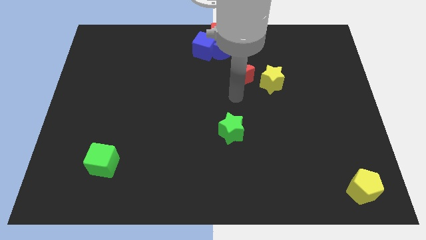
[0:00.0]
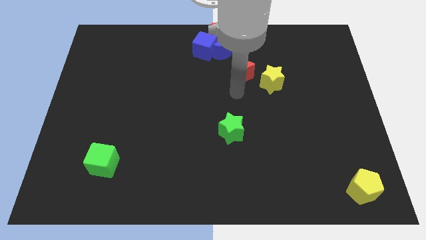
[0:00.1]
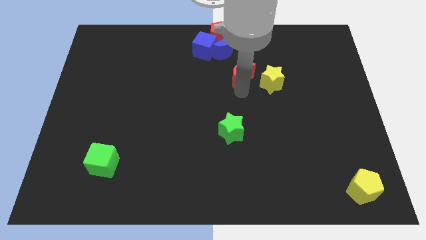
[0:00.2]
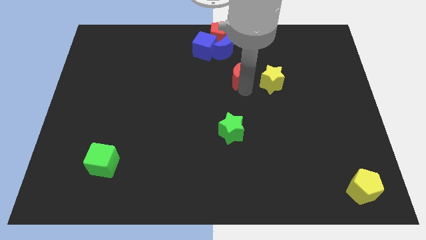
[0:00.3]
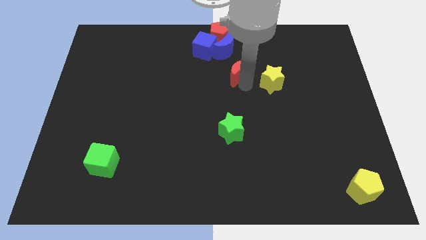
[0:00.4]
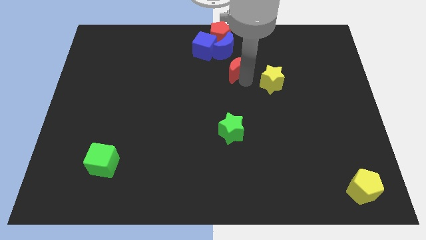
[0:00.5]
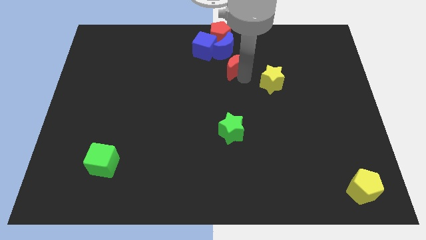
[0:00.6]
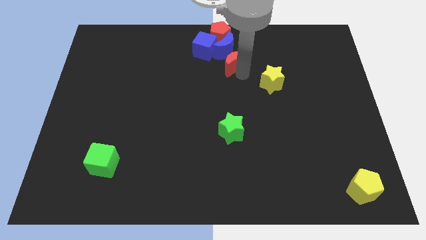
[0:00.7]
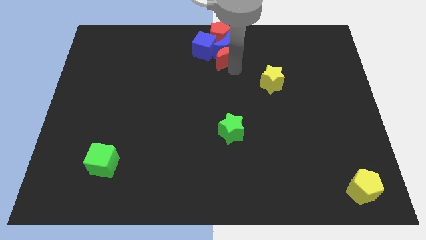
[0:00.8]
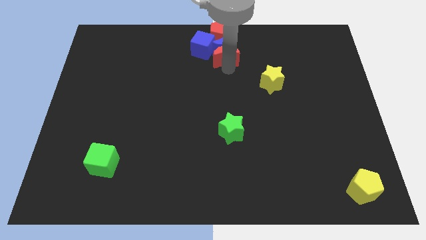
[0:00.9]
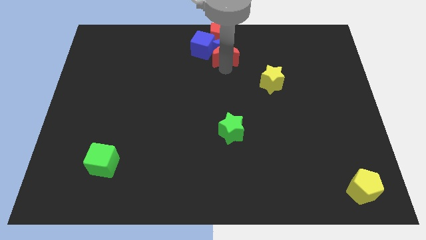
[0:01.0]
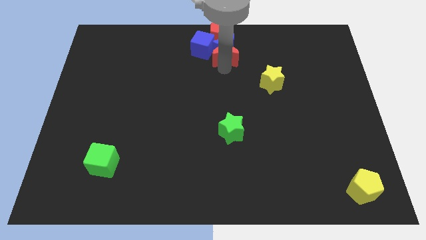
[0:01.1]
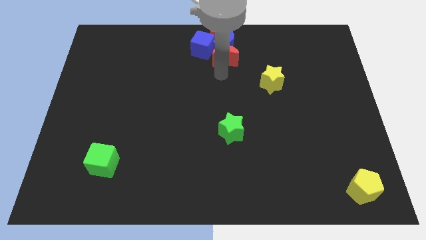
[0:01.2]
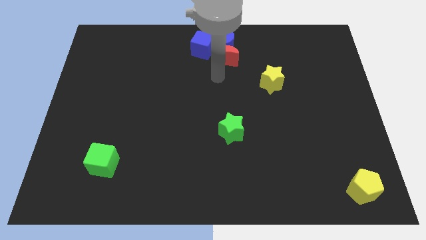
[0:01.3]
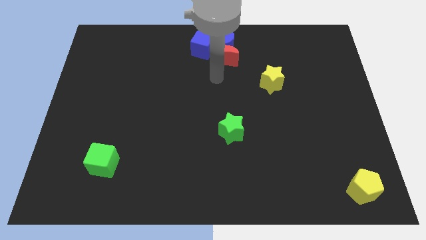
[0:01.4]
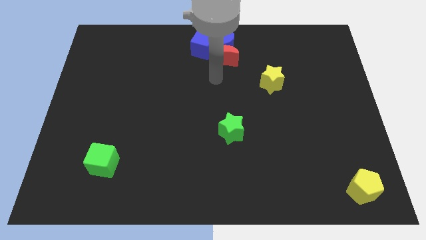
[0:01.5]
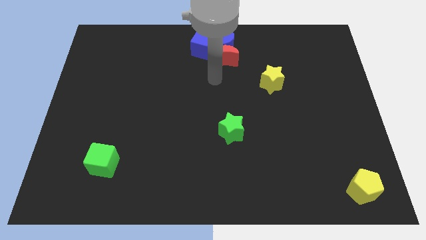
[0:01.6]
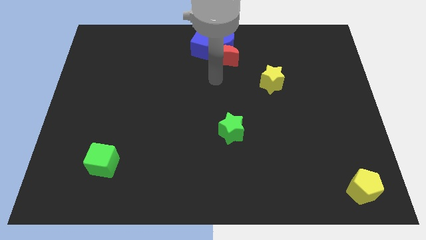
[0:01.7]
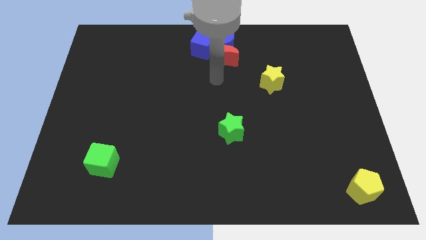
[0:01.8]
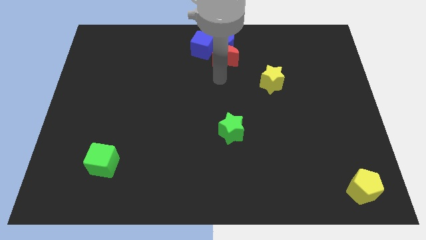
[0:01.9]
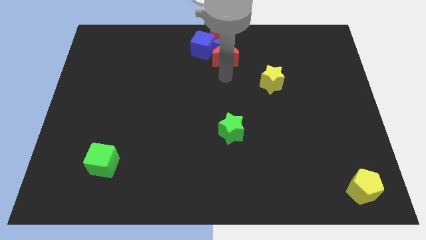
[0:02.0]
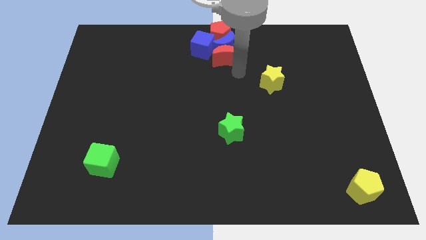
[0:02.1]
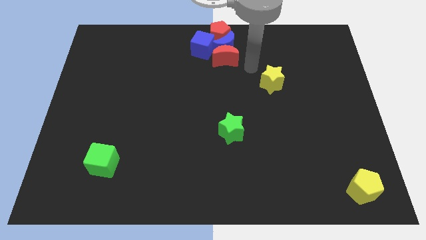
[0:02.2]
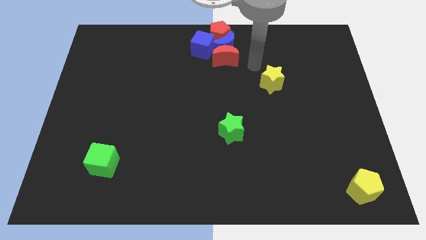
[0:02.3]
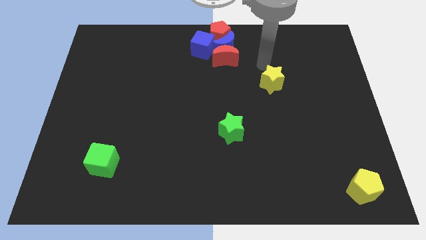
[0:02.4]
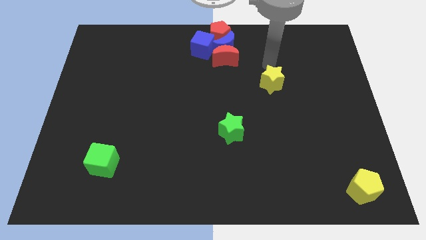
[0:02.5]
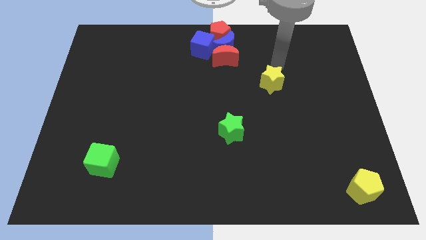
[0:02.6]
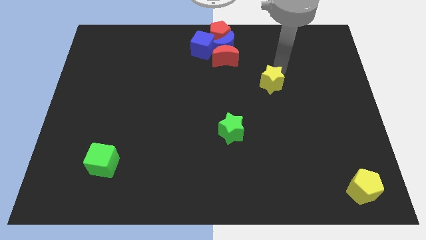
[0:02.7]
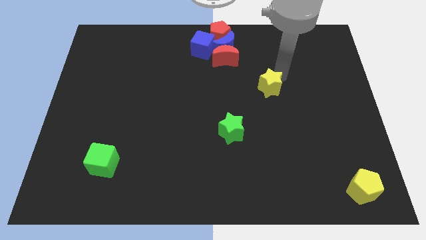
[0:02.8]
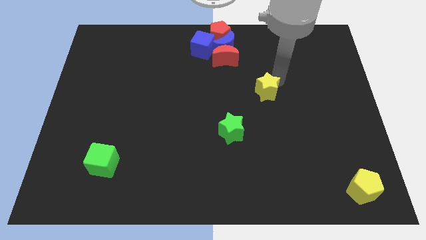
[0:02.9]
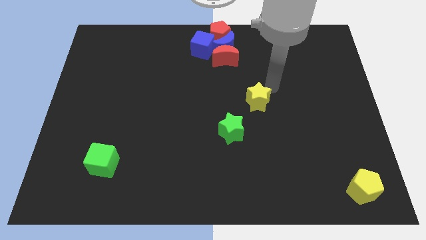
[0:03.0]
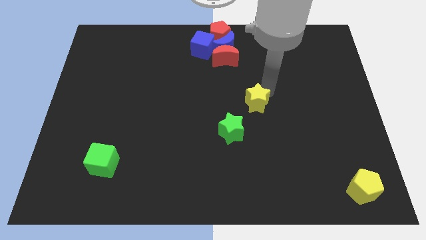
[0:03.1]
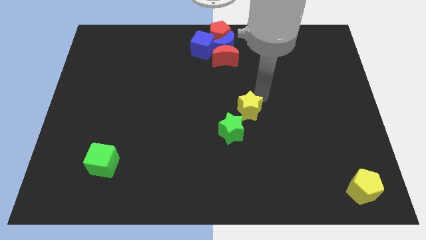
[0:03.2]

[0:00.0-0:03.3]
move the yellow star slightly downwards

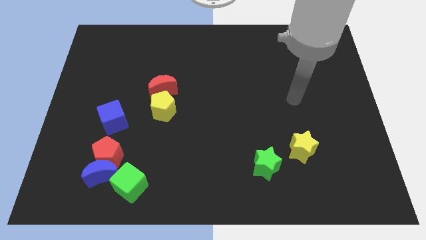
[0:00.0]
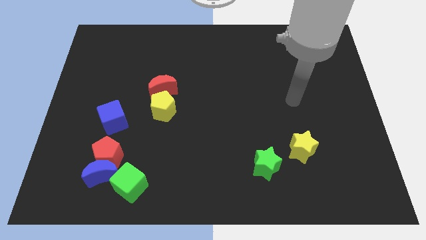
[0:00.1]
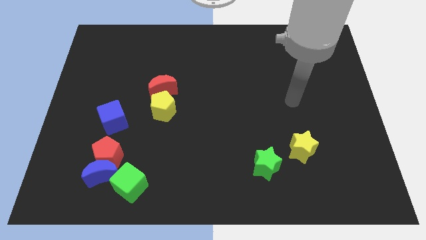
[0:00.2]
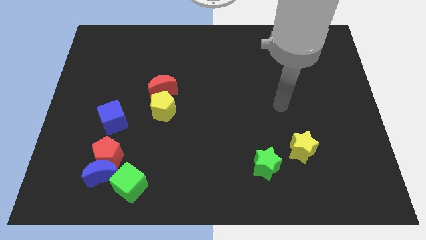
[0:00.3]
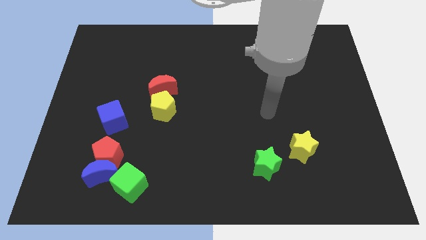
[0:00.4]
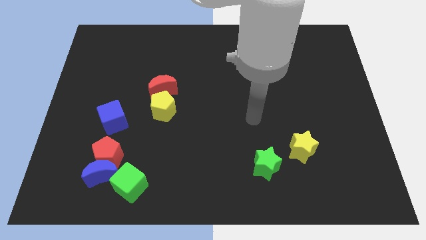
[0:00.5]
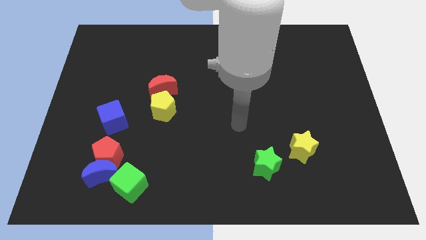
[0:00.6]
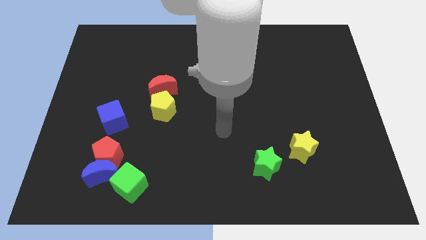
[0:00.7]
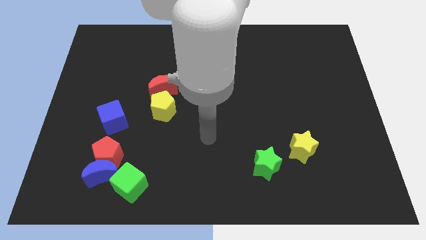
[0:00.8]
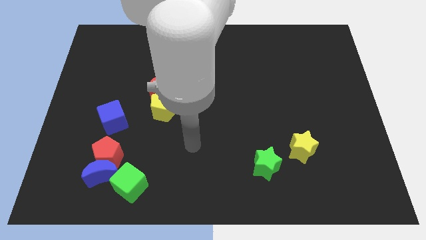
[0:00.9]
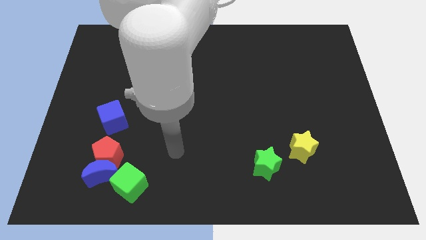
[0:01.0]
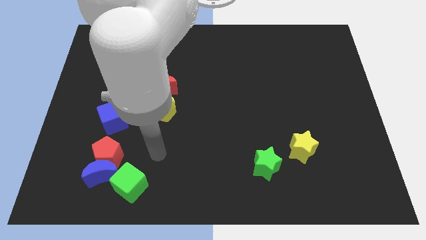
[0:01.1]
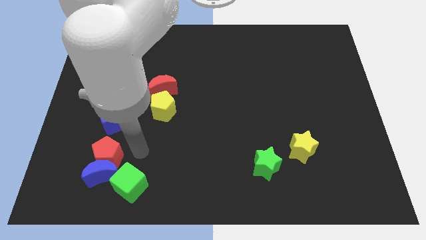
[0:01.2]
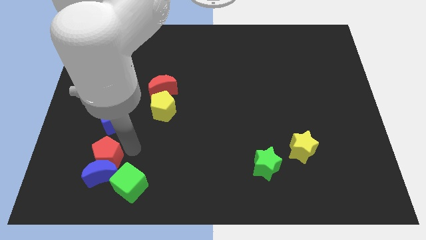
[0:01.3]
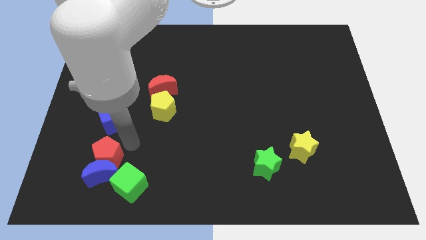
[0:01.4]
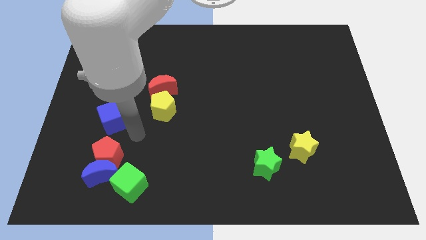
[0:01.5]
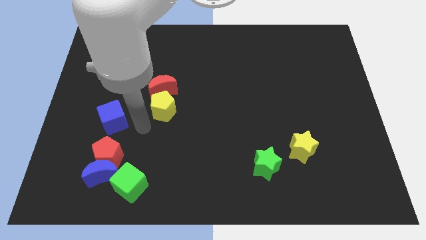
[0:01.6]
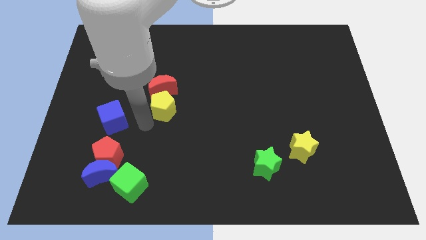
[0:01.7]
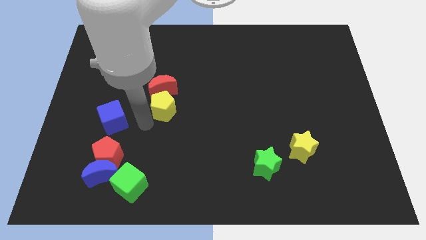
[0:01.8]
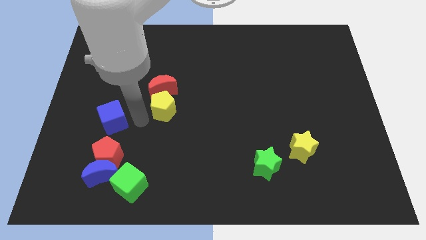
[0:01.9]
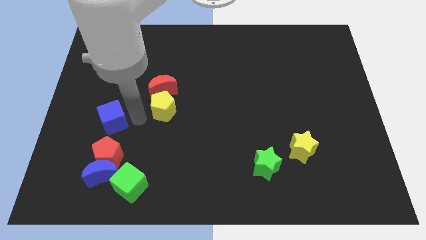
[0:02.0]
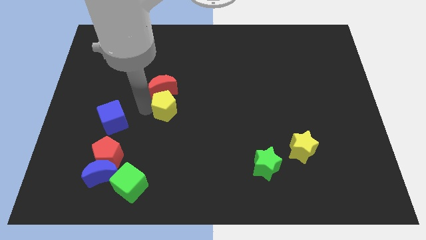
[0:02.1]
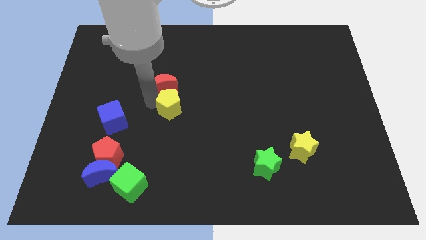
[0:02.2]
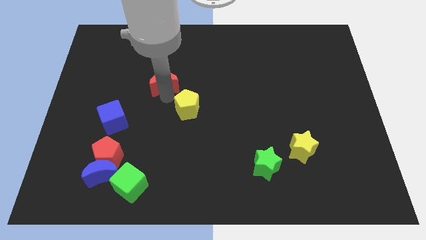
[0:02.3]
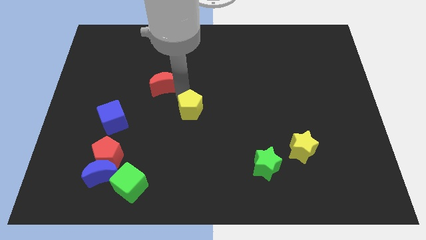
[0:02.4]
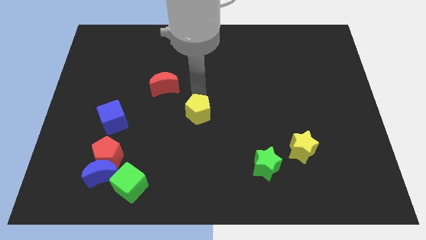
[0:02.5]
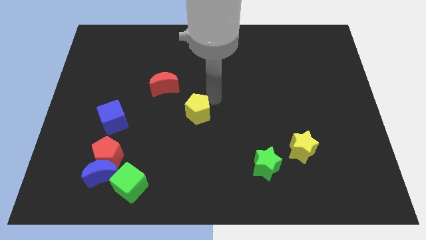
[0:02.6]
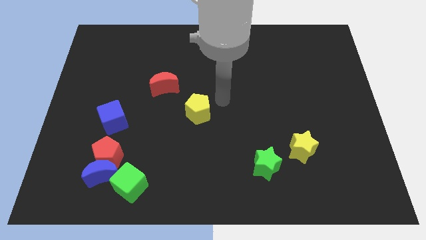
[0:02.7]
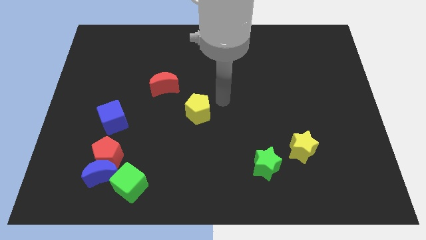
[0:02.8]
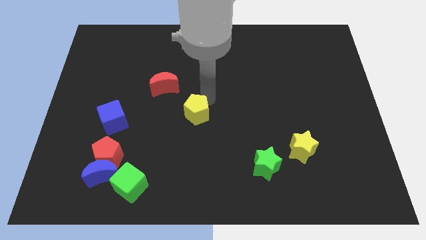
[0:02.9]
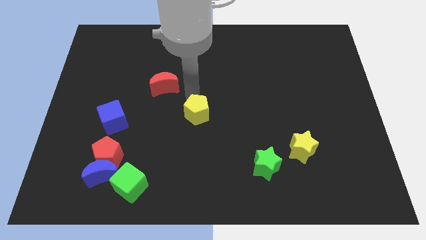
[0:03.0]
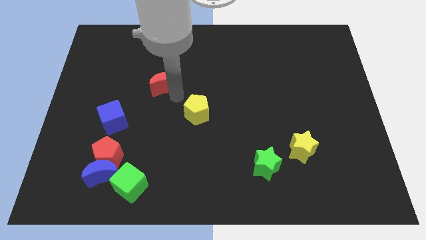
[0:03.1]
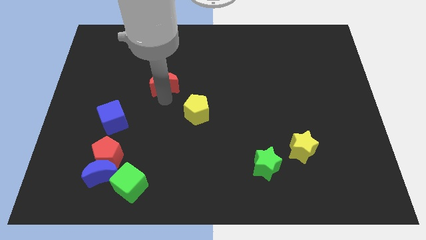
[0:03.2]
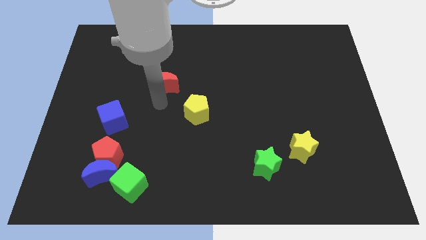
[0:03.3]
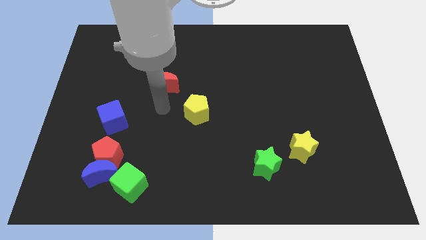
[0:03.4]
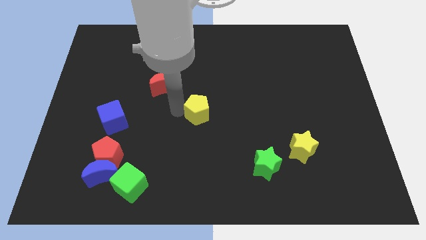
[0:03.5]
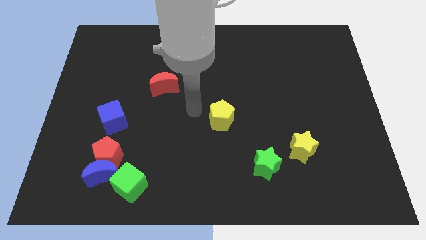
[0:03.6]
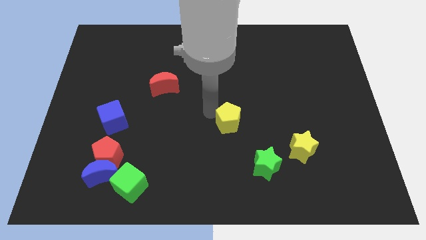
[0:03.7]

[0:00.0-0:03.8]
push the yellow pentagon to the center of the board

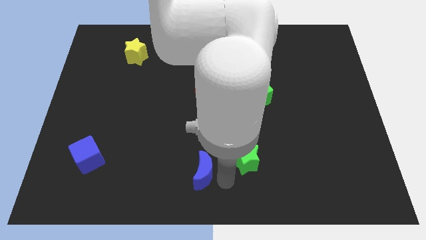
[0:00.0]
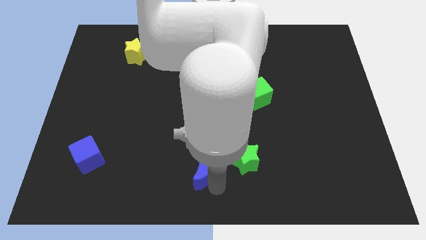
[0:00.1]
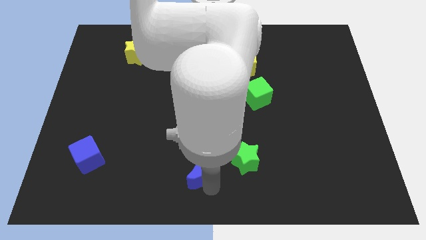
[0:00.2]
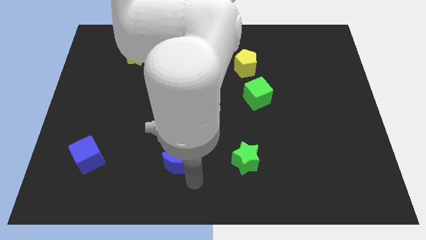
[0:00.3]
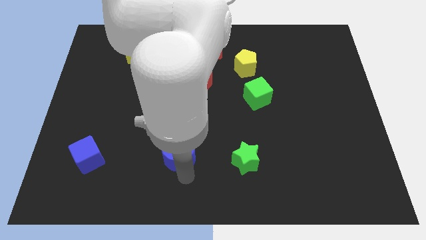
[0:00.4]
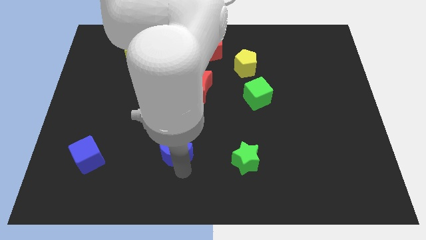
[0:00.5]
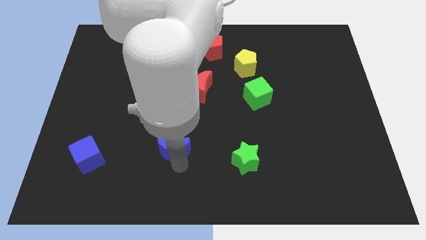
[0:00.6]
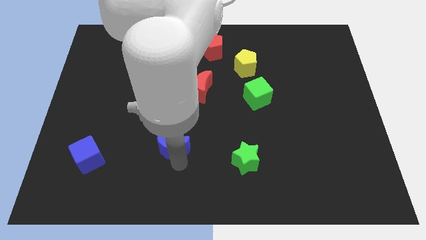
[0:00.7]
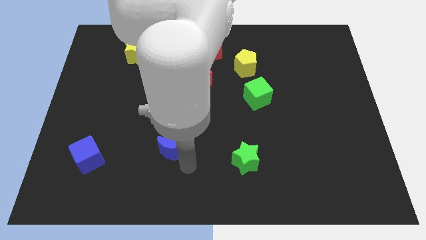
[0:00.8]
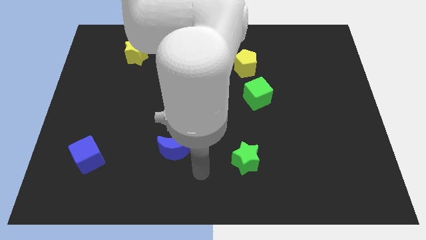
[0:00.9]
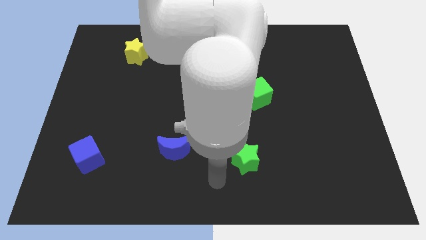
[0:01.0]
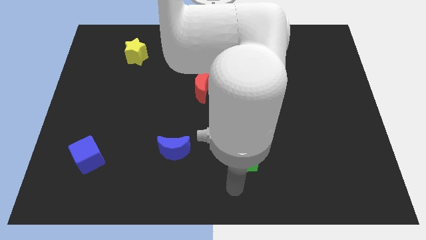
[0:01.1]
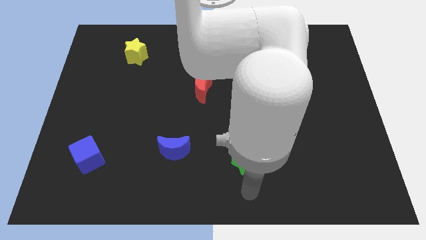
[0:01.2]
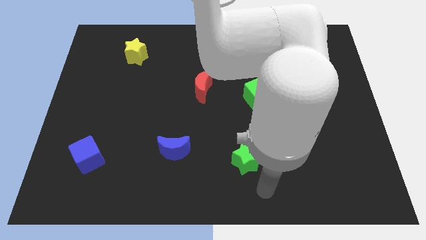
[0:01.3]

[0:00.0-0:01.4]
push the blue moon slightly up on the board

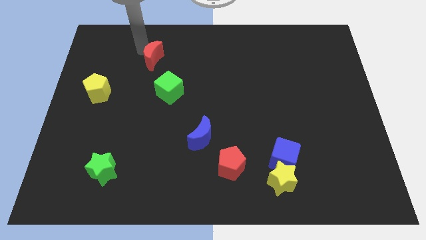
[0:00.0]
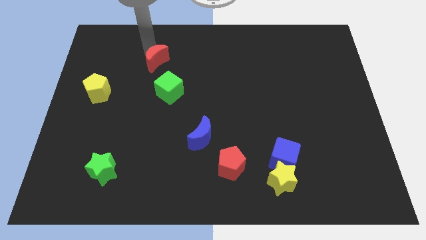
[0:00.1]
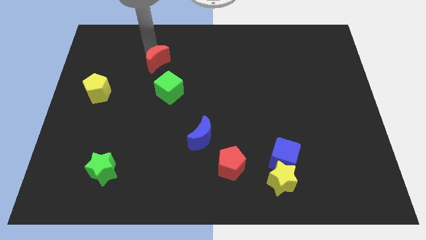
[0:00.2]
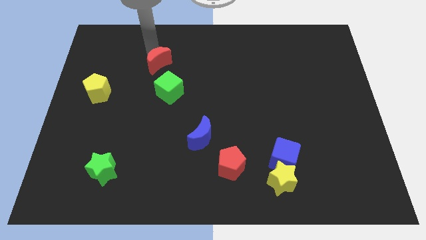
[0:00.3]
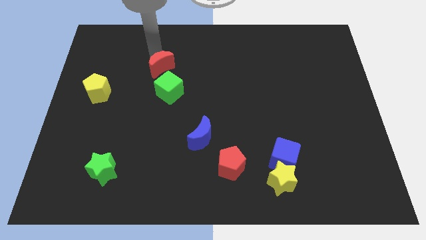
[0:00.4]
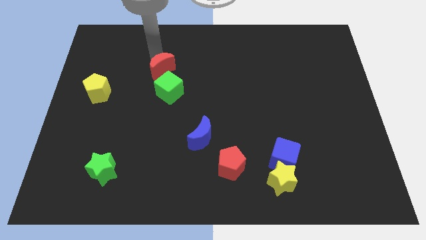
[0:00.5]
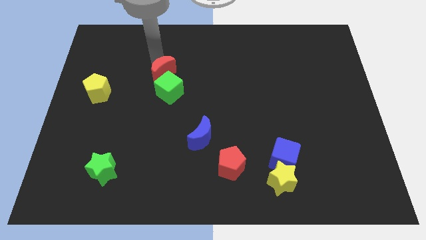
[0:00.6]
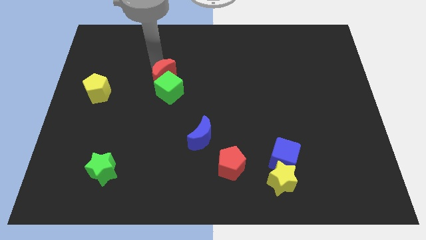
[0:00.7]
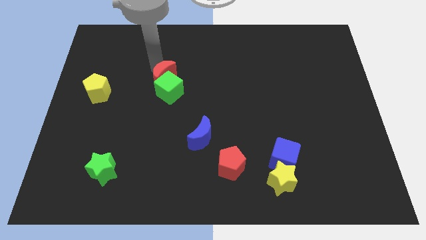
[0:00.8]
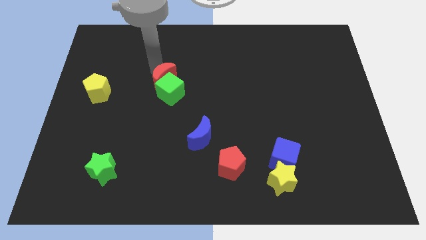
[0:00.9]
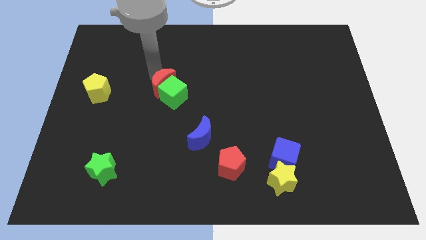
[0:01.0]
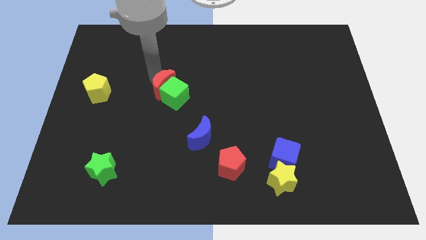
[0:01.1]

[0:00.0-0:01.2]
slide the red crescent into the green cube
